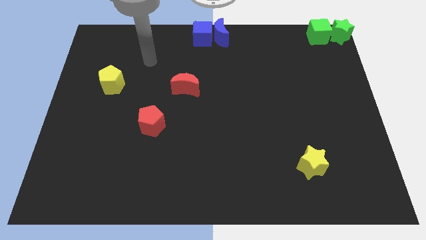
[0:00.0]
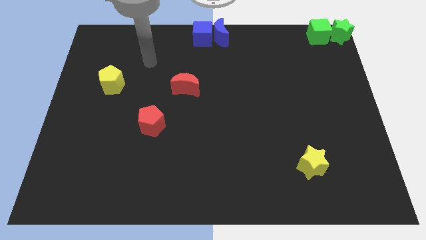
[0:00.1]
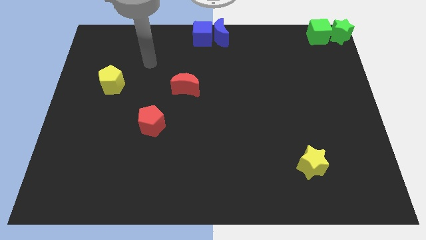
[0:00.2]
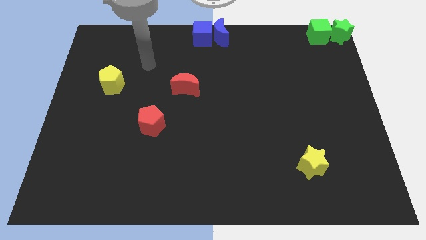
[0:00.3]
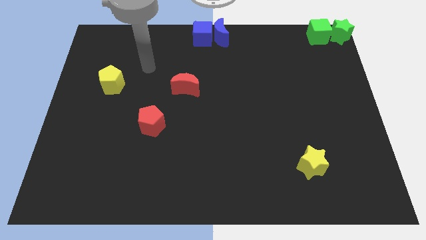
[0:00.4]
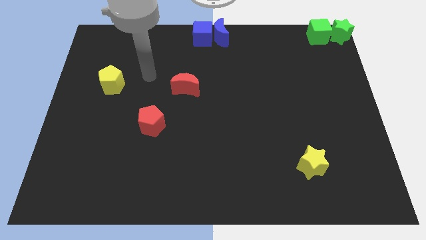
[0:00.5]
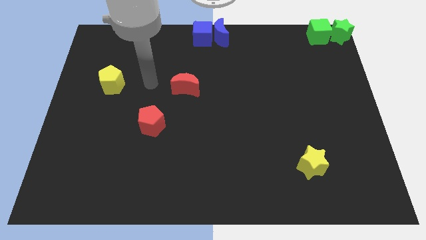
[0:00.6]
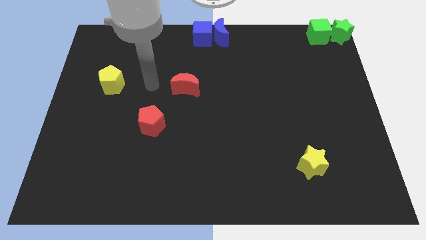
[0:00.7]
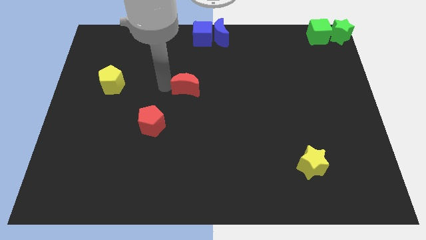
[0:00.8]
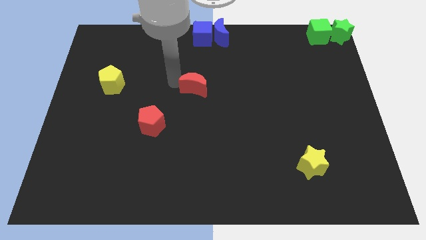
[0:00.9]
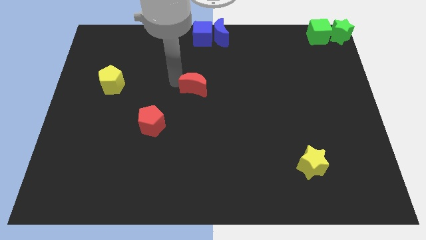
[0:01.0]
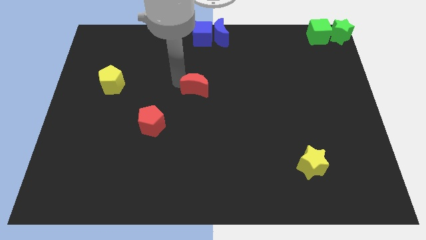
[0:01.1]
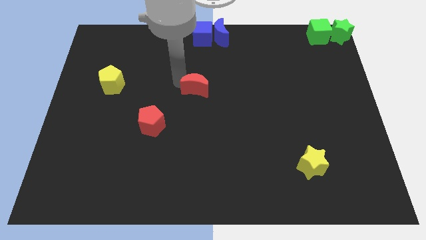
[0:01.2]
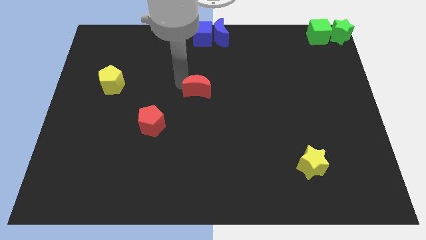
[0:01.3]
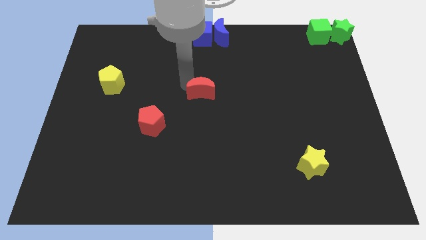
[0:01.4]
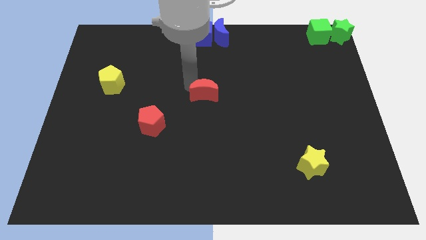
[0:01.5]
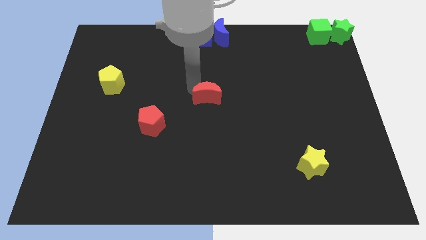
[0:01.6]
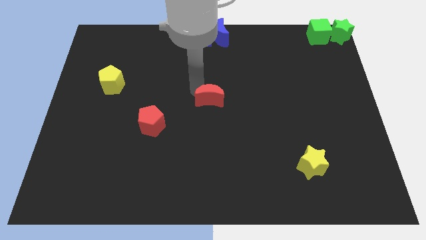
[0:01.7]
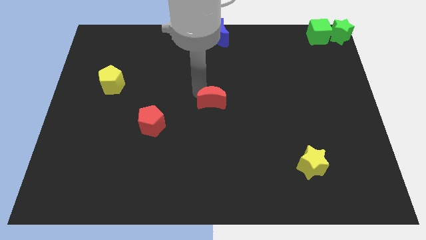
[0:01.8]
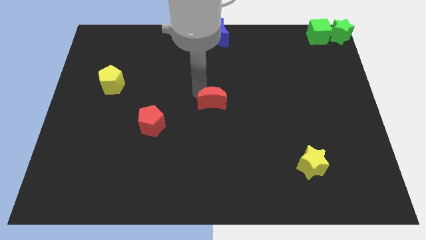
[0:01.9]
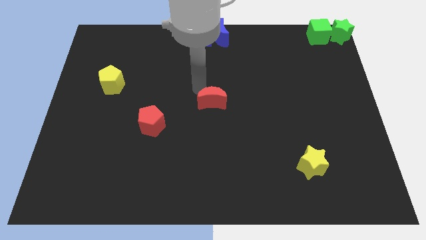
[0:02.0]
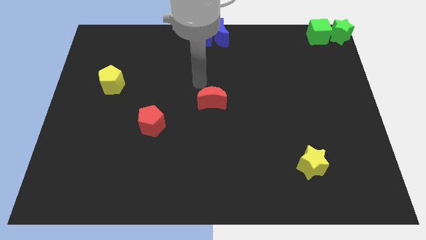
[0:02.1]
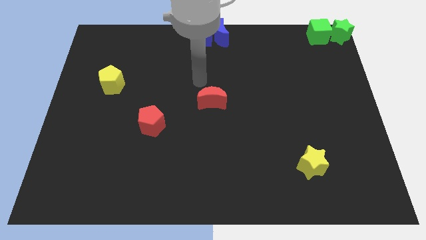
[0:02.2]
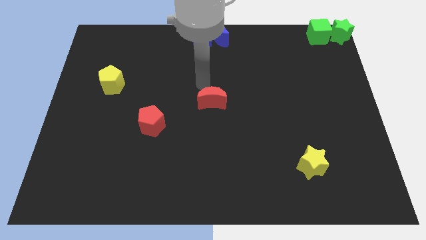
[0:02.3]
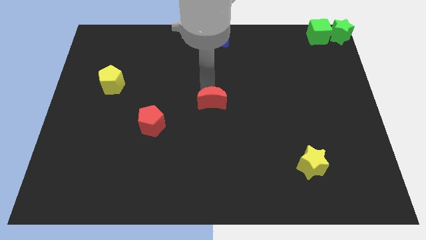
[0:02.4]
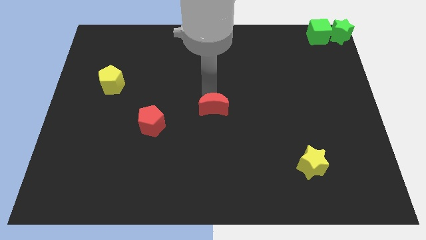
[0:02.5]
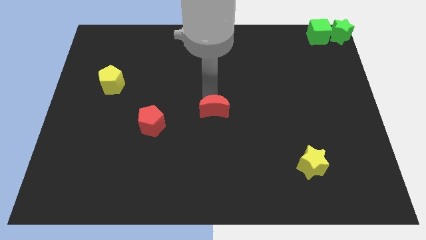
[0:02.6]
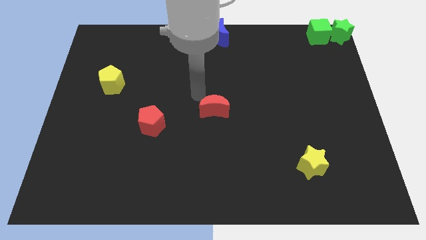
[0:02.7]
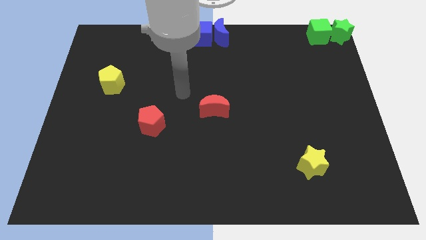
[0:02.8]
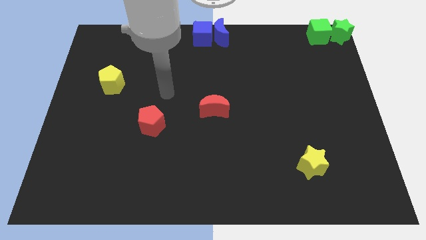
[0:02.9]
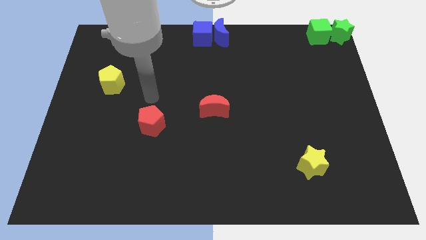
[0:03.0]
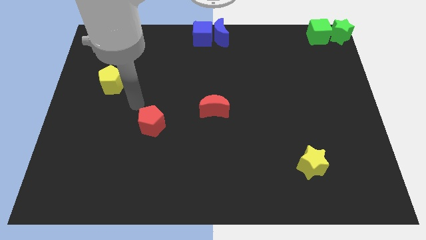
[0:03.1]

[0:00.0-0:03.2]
place the red crescent at the center of the board

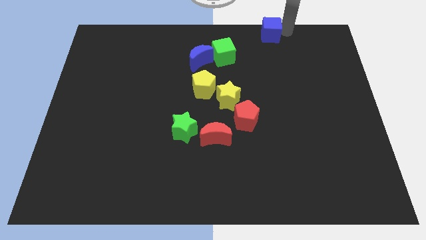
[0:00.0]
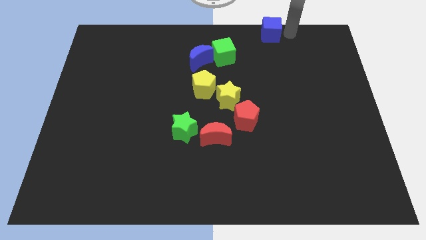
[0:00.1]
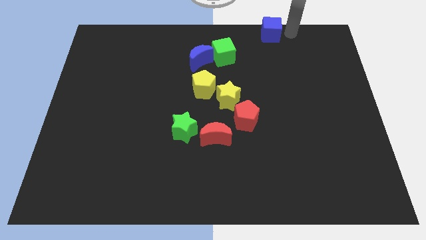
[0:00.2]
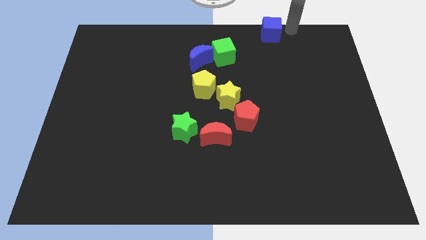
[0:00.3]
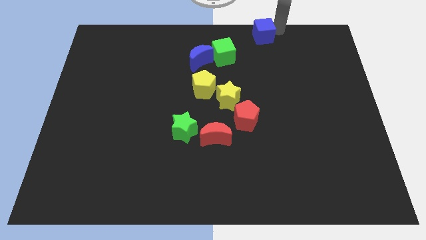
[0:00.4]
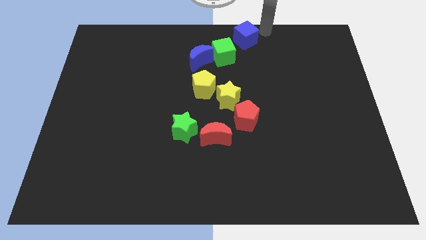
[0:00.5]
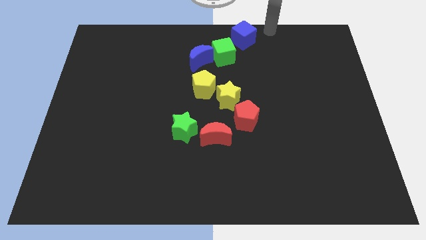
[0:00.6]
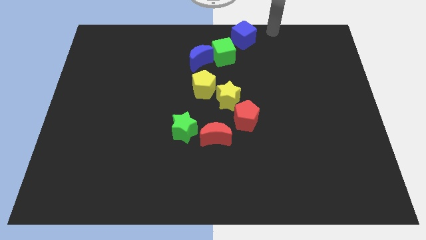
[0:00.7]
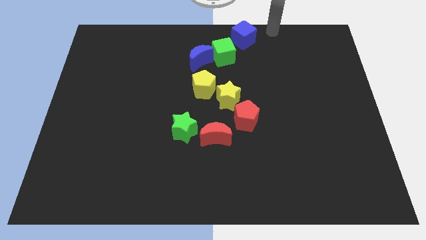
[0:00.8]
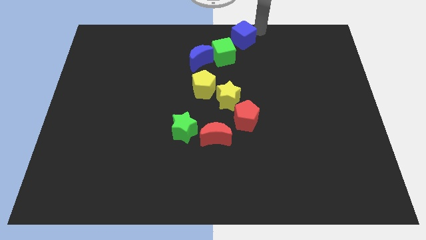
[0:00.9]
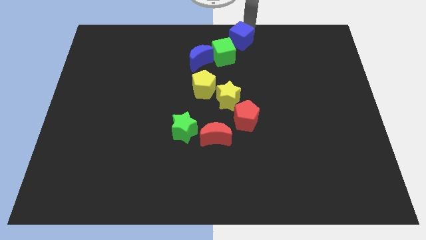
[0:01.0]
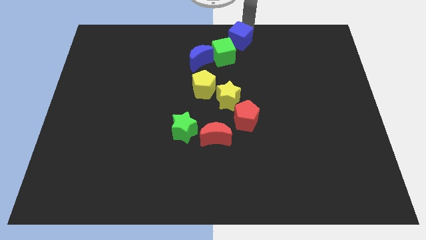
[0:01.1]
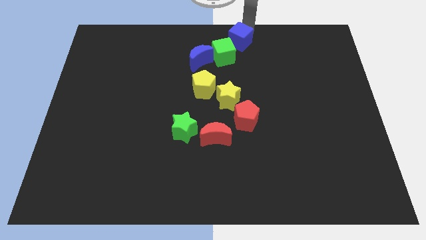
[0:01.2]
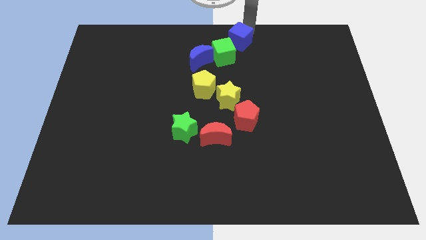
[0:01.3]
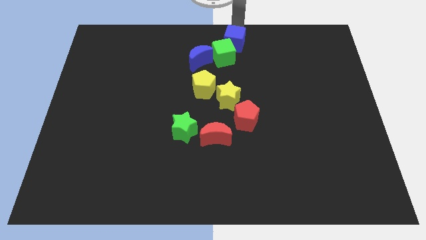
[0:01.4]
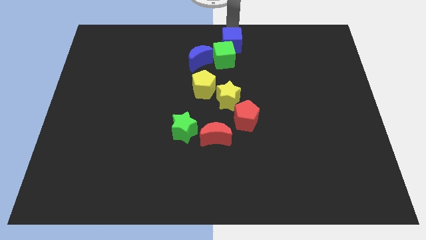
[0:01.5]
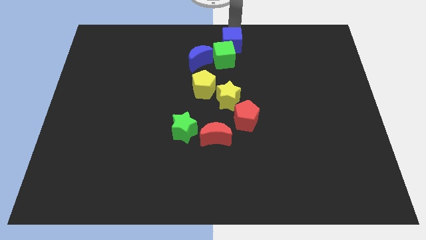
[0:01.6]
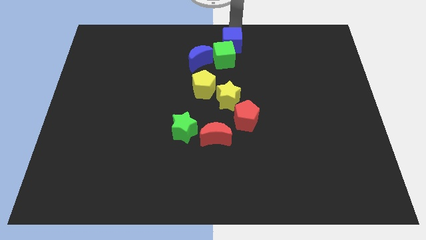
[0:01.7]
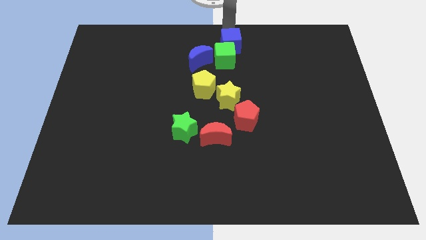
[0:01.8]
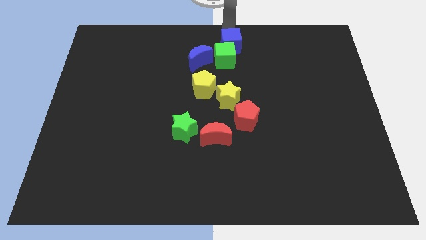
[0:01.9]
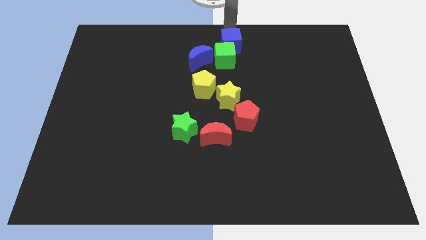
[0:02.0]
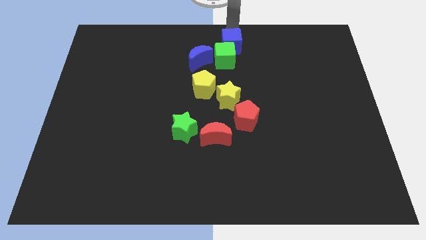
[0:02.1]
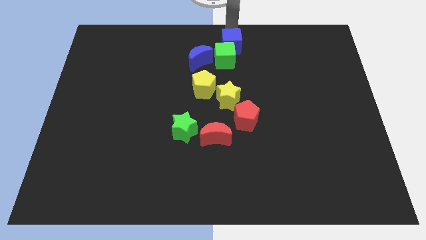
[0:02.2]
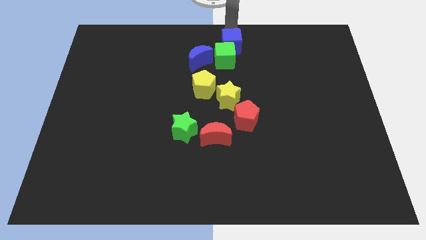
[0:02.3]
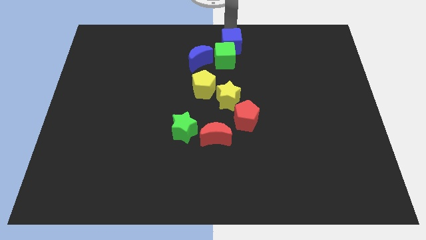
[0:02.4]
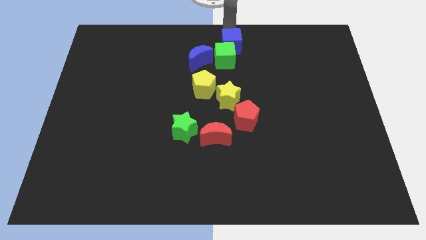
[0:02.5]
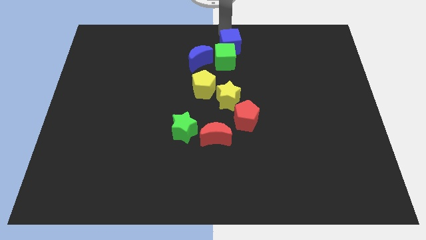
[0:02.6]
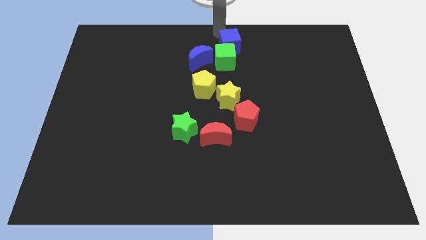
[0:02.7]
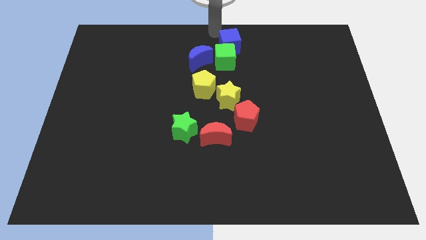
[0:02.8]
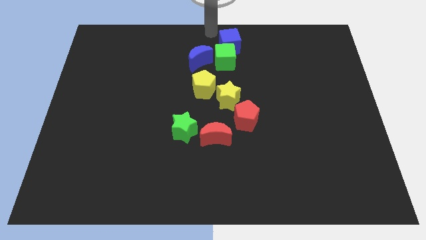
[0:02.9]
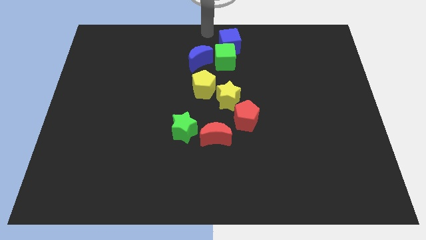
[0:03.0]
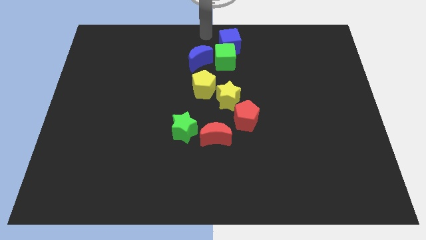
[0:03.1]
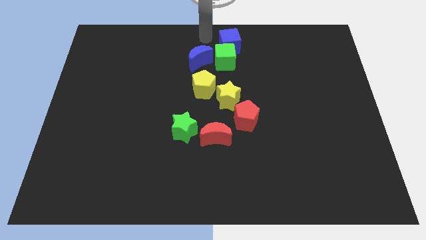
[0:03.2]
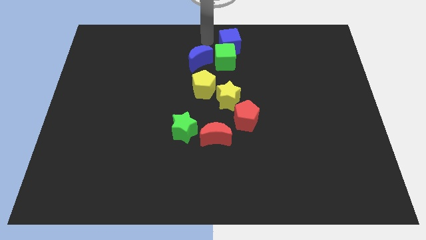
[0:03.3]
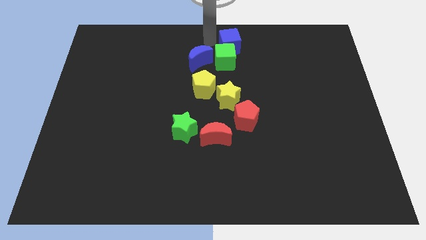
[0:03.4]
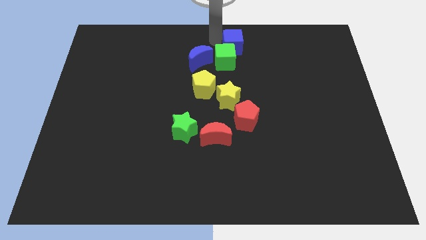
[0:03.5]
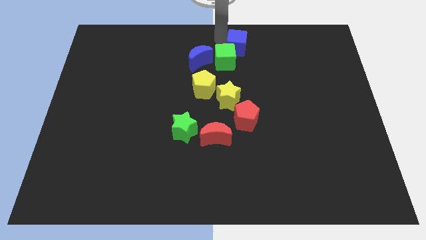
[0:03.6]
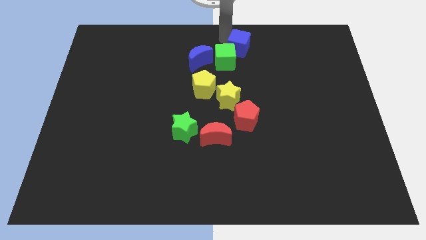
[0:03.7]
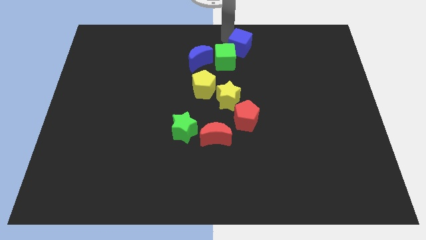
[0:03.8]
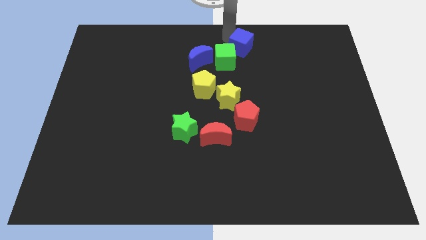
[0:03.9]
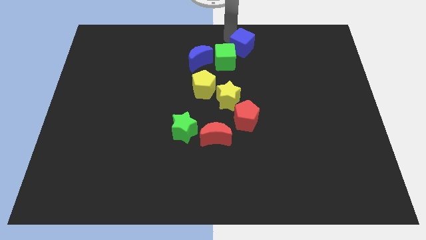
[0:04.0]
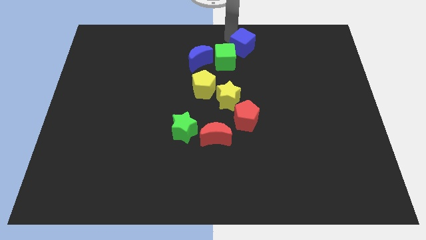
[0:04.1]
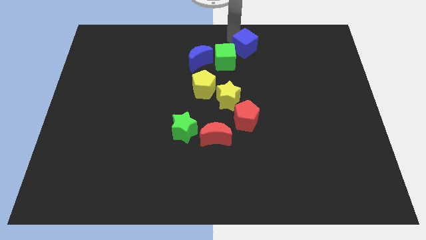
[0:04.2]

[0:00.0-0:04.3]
place the blue cube diagonally to the green cube

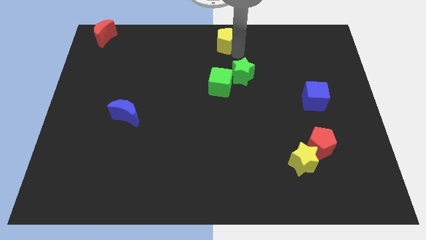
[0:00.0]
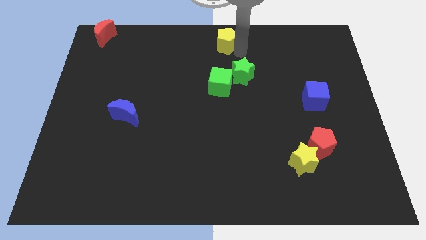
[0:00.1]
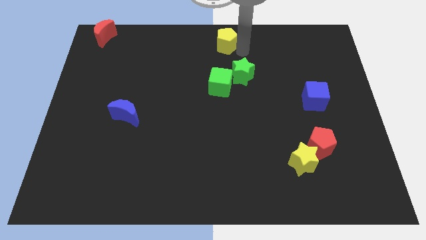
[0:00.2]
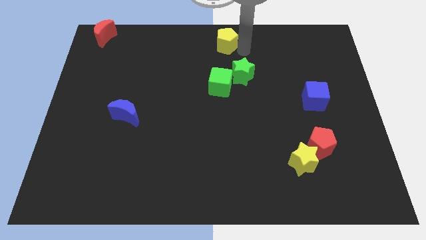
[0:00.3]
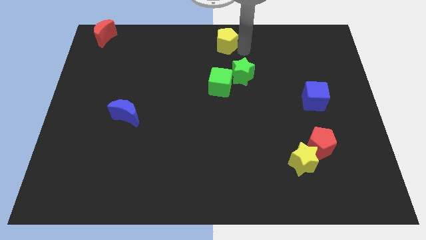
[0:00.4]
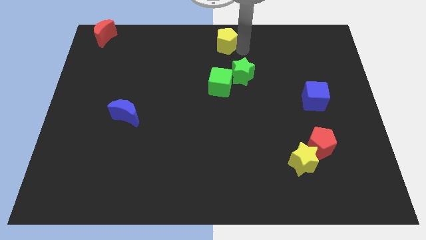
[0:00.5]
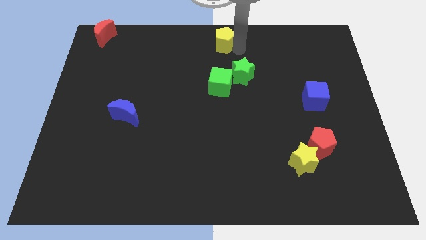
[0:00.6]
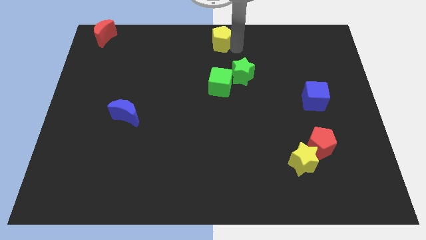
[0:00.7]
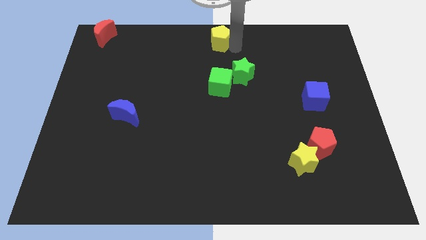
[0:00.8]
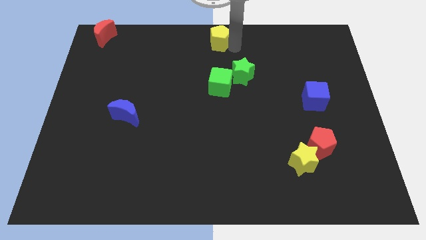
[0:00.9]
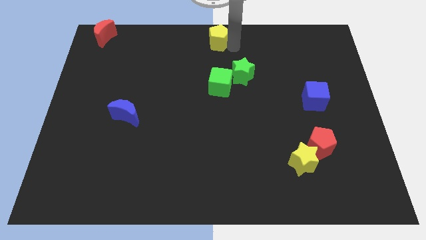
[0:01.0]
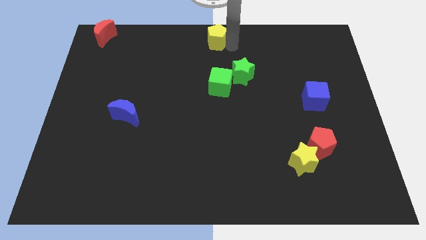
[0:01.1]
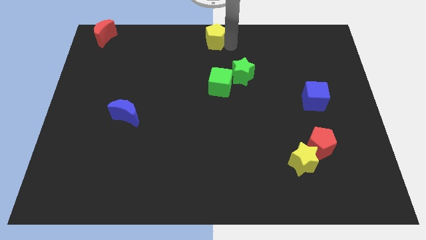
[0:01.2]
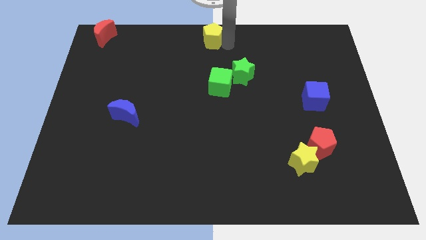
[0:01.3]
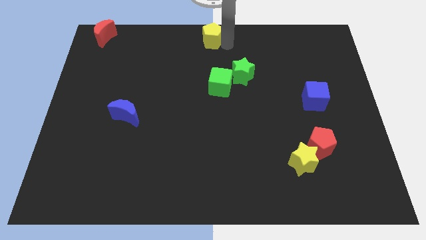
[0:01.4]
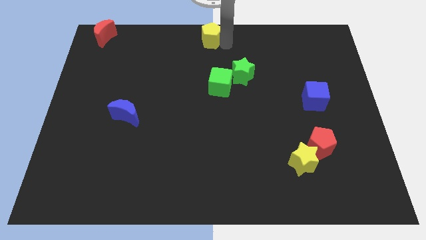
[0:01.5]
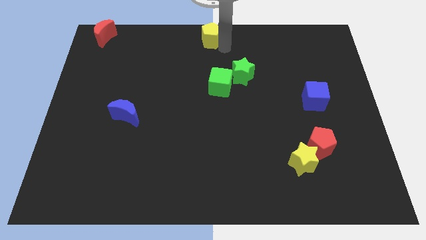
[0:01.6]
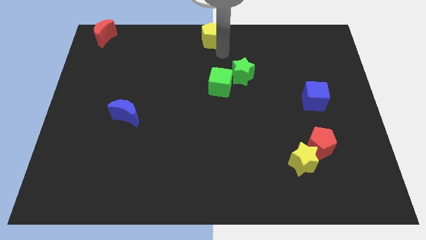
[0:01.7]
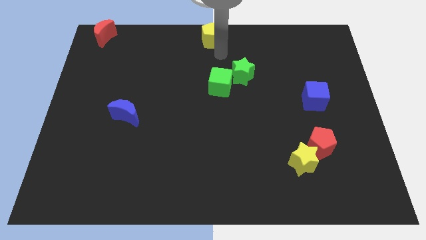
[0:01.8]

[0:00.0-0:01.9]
place the yellow pentagon at the top center of the board
